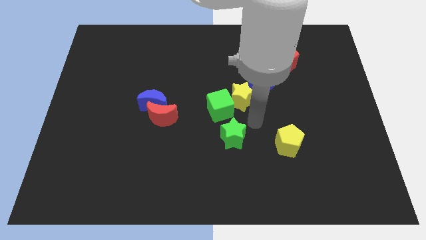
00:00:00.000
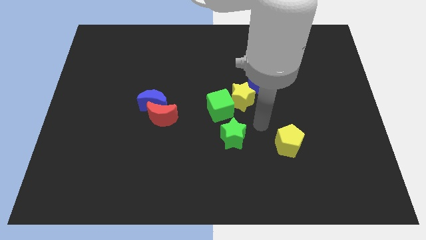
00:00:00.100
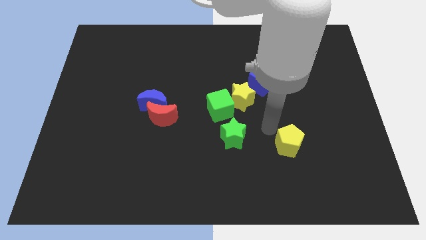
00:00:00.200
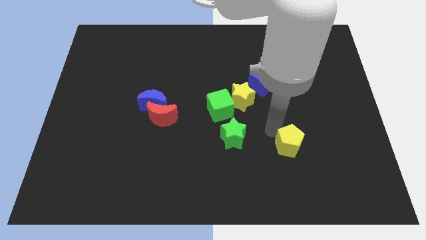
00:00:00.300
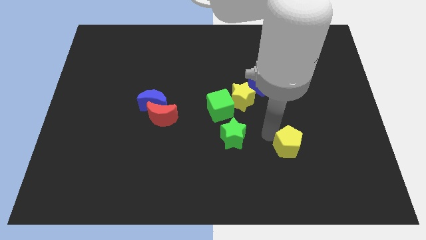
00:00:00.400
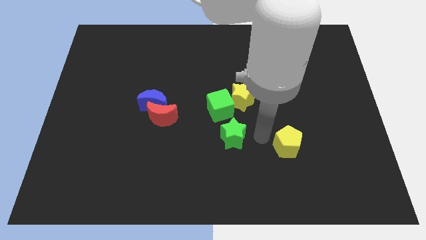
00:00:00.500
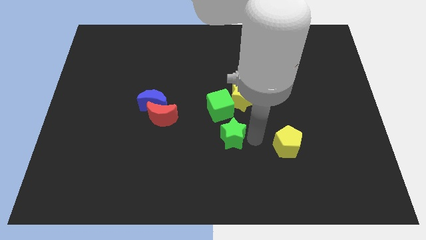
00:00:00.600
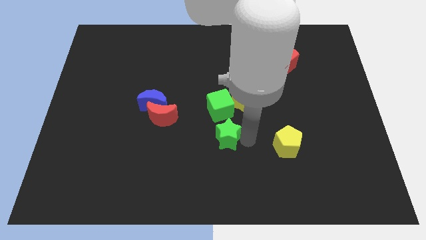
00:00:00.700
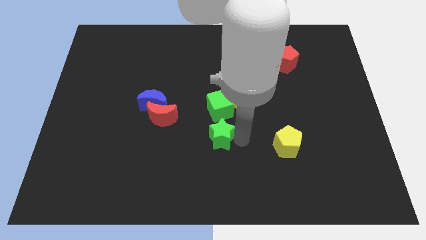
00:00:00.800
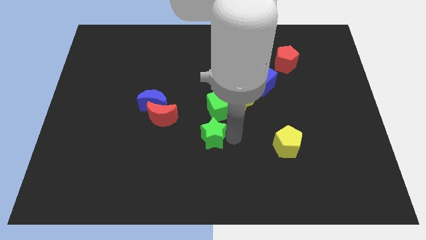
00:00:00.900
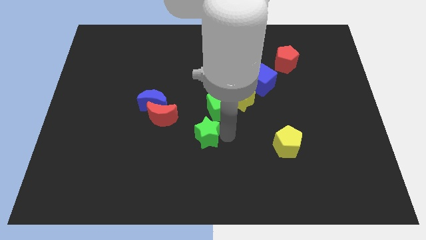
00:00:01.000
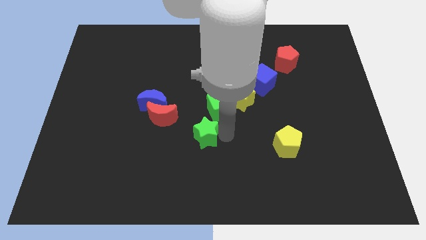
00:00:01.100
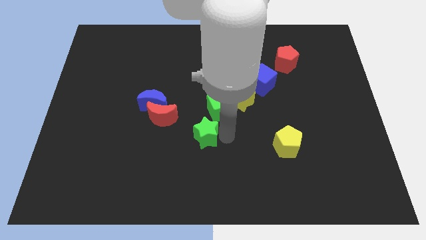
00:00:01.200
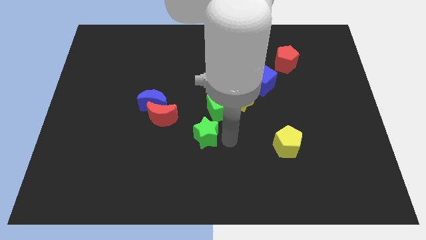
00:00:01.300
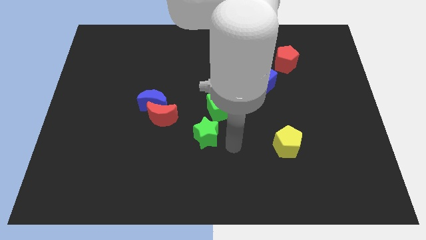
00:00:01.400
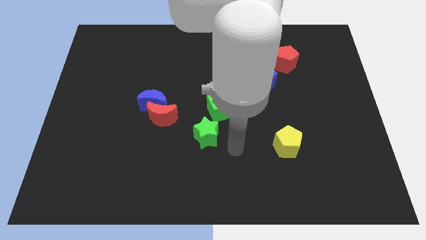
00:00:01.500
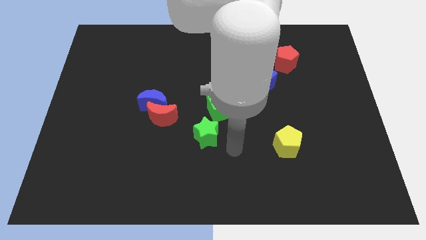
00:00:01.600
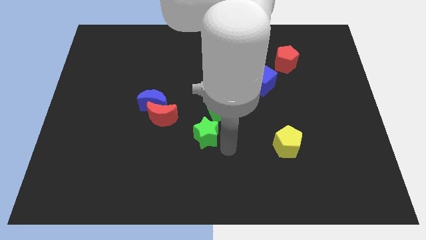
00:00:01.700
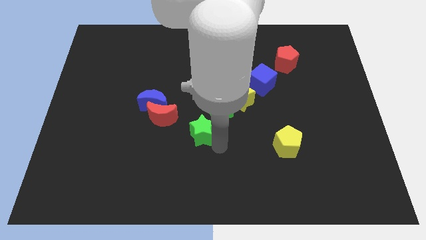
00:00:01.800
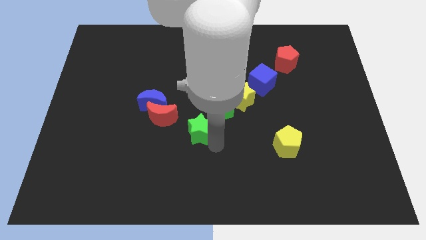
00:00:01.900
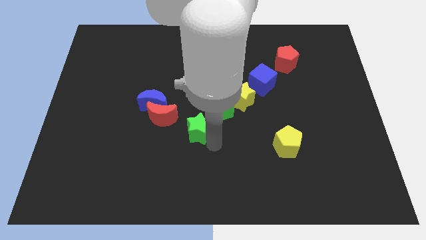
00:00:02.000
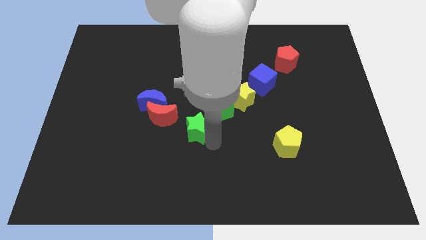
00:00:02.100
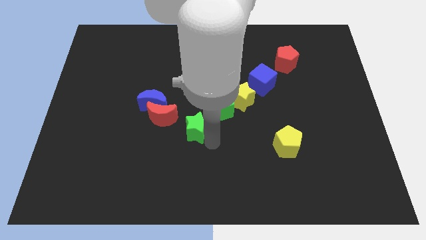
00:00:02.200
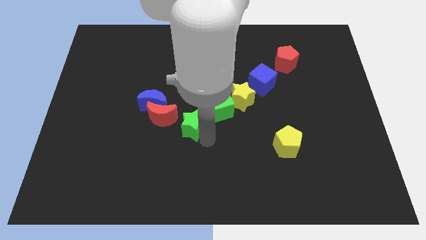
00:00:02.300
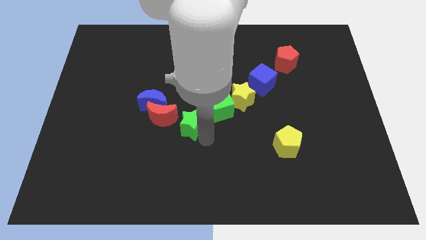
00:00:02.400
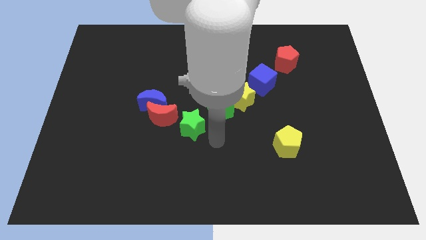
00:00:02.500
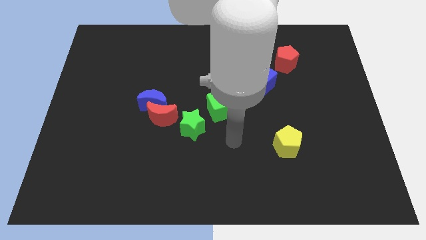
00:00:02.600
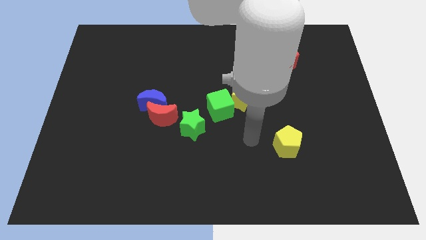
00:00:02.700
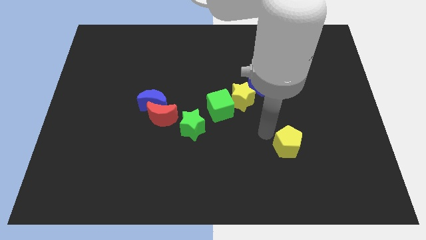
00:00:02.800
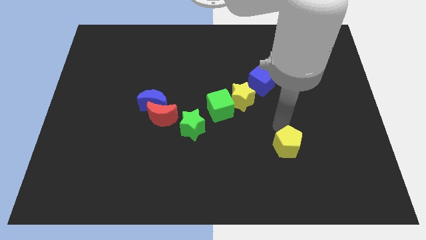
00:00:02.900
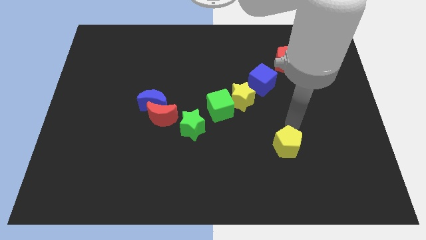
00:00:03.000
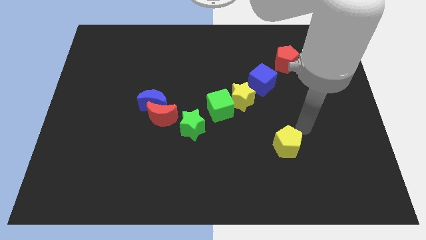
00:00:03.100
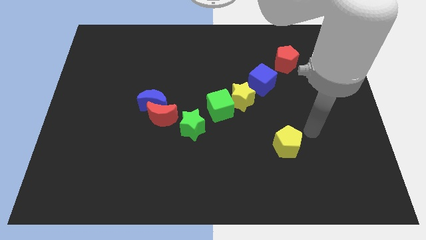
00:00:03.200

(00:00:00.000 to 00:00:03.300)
move the green star to the right of the red moon

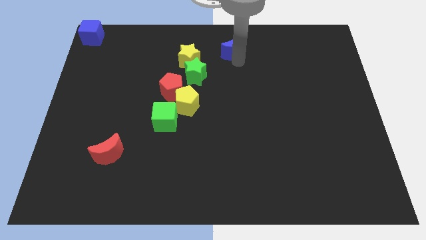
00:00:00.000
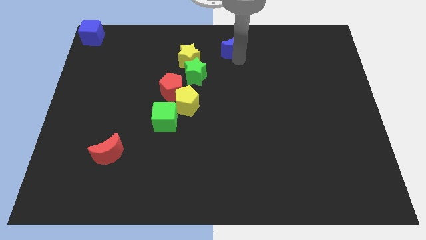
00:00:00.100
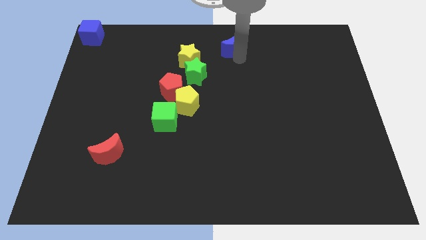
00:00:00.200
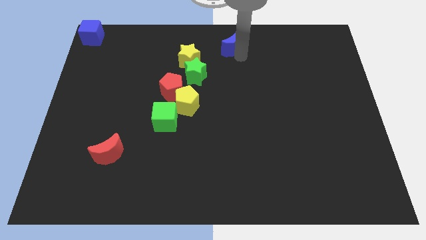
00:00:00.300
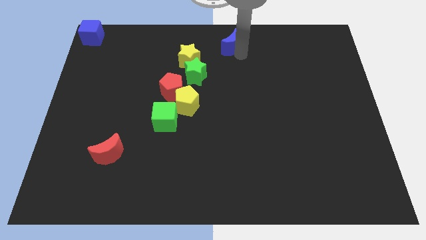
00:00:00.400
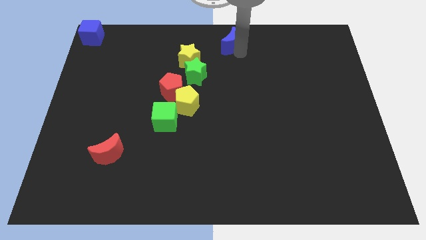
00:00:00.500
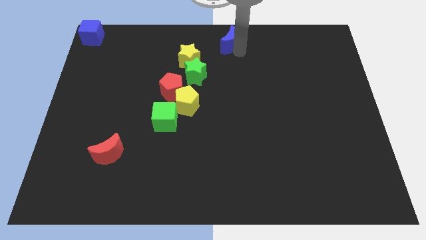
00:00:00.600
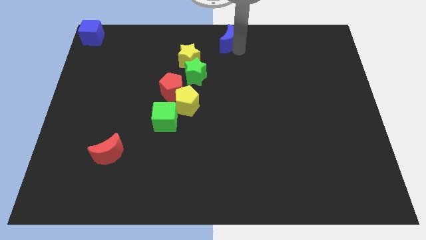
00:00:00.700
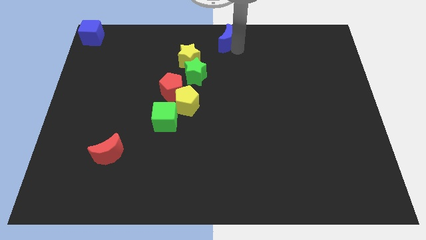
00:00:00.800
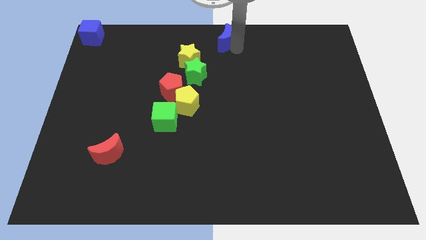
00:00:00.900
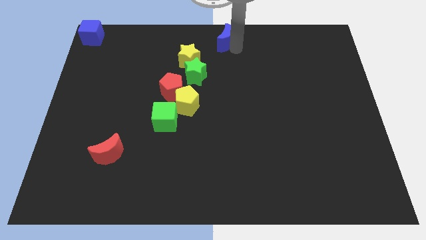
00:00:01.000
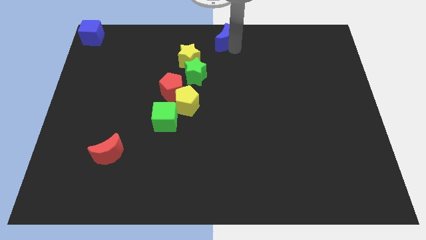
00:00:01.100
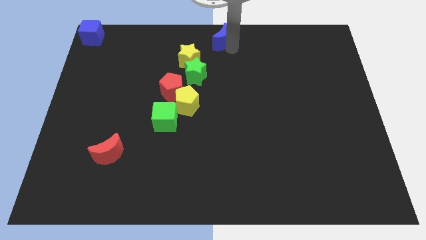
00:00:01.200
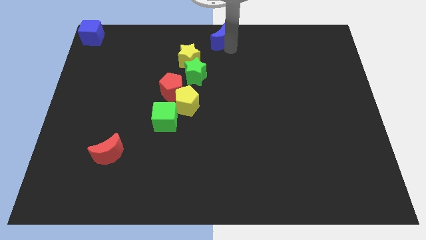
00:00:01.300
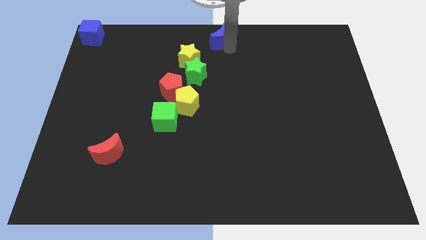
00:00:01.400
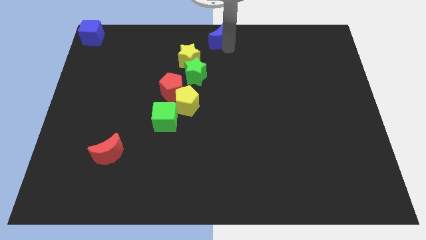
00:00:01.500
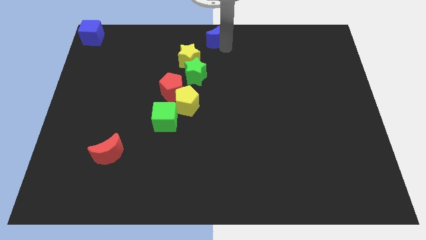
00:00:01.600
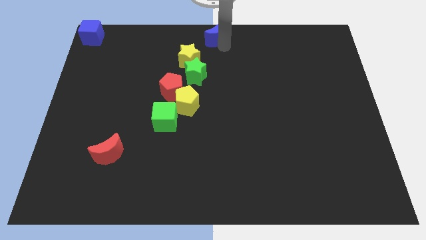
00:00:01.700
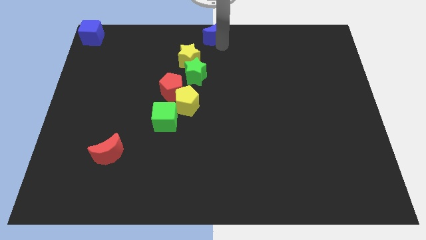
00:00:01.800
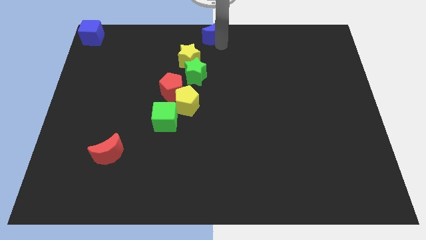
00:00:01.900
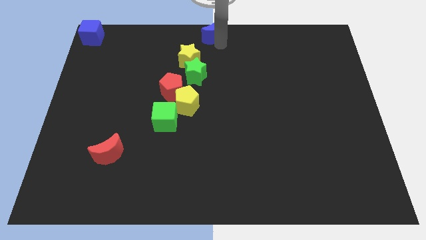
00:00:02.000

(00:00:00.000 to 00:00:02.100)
place the blue moon towards the top center of the board

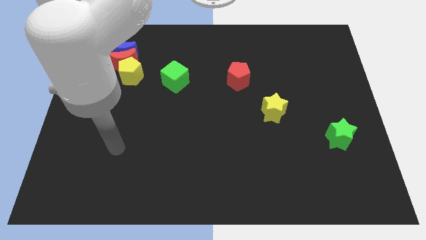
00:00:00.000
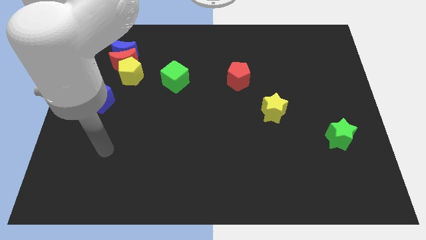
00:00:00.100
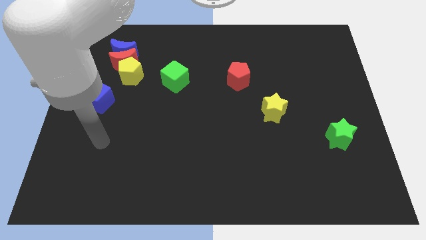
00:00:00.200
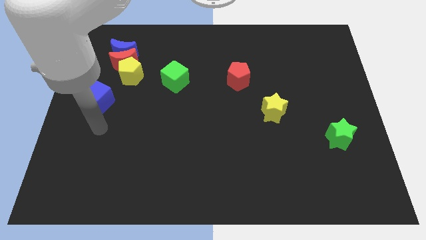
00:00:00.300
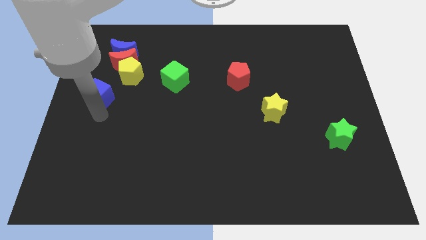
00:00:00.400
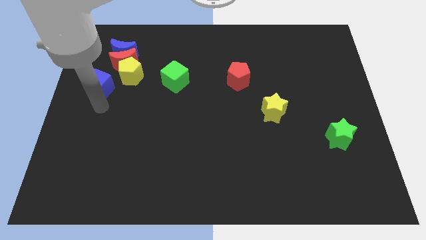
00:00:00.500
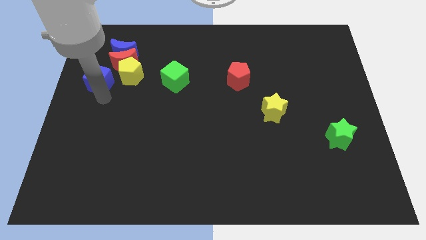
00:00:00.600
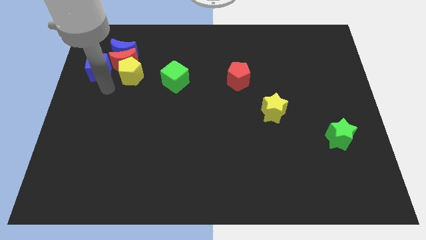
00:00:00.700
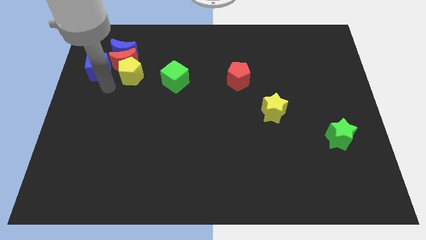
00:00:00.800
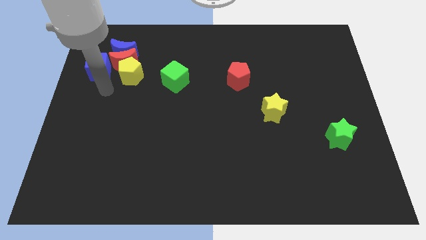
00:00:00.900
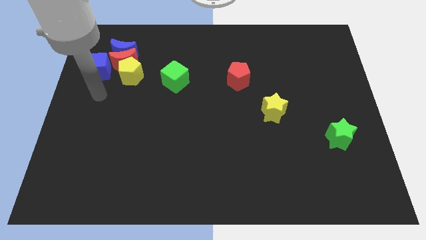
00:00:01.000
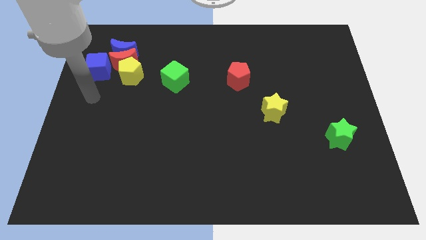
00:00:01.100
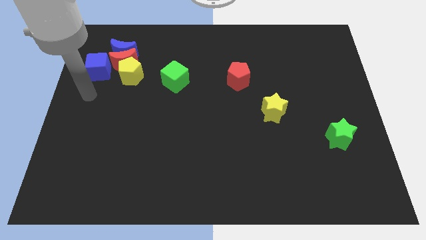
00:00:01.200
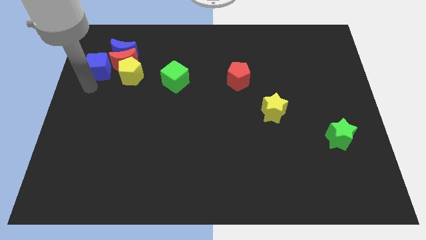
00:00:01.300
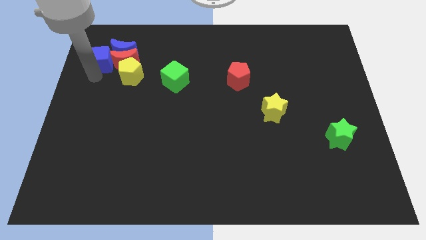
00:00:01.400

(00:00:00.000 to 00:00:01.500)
push blue cube to the left of the red crescent

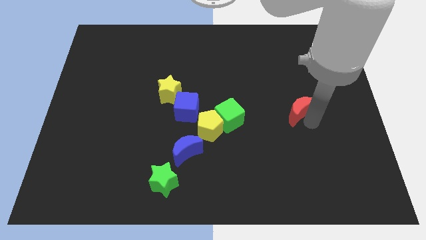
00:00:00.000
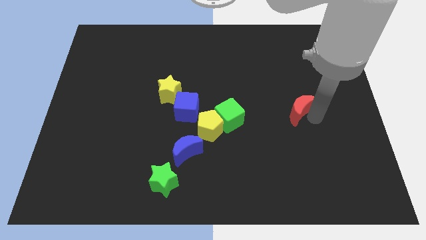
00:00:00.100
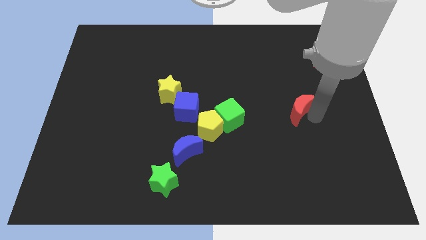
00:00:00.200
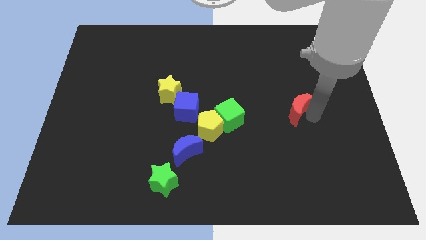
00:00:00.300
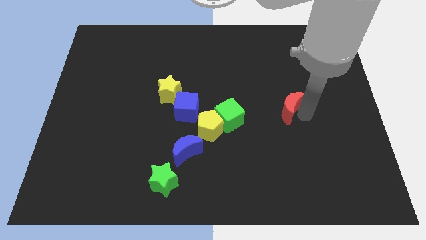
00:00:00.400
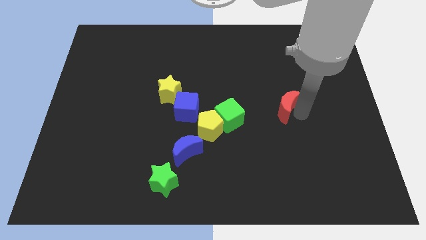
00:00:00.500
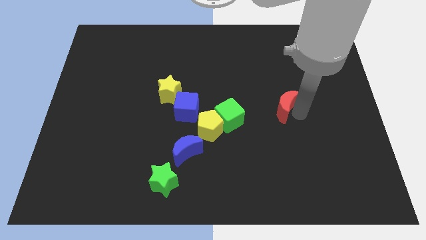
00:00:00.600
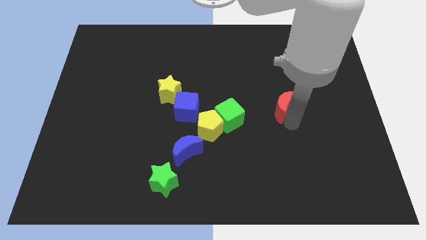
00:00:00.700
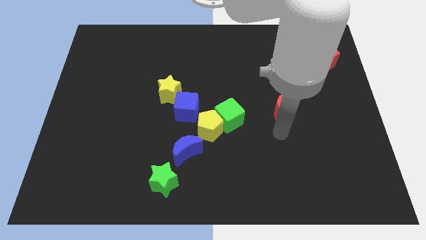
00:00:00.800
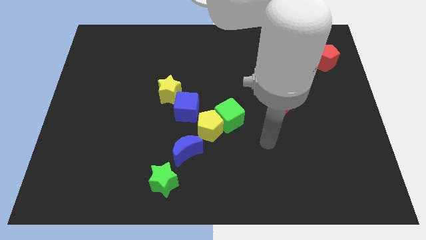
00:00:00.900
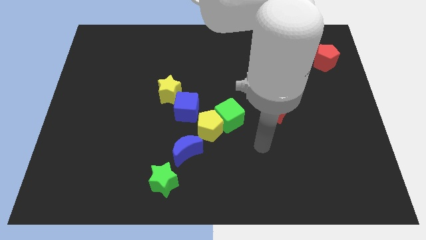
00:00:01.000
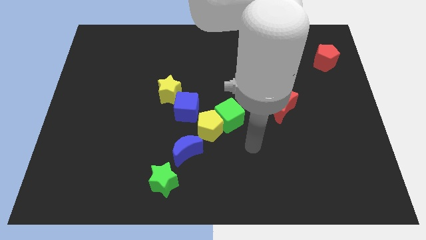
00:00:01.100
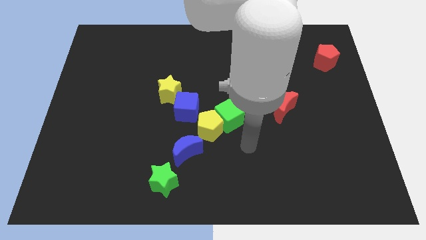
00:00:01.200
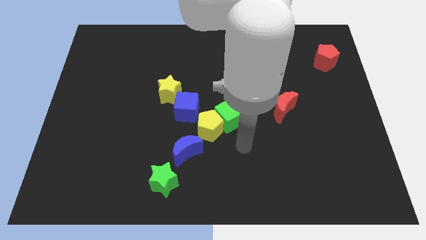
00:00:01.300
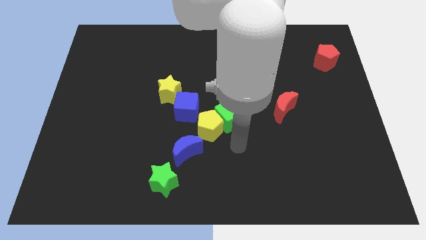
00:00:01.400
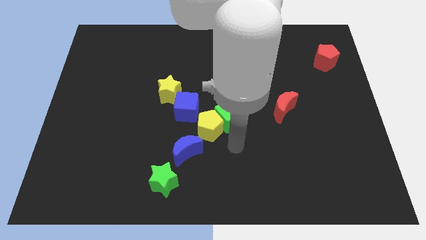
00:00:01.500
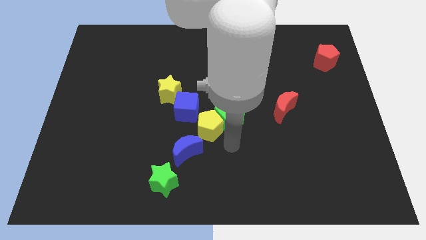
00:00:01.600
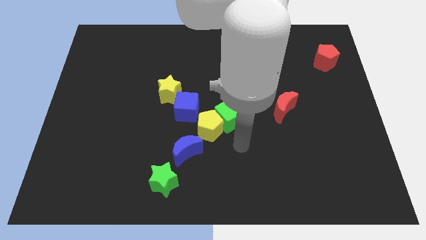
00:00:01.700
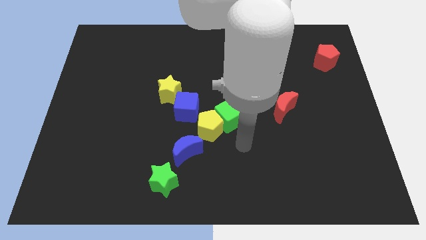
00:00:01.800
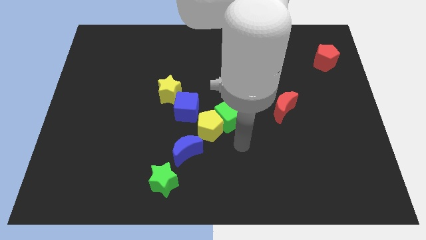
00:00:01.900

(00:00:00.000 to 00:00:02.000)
drag the red moon slightly upwards
